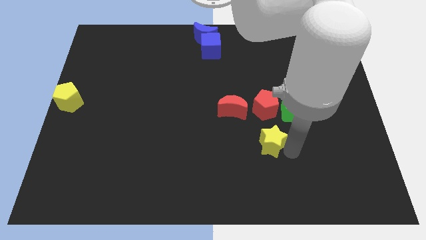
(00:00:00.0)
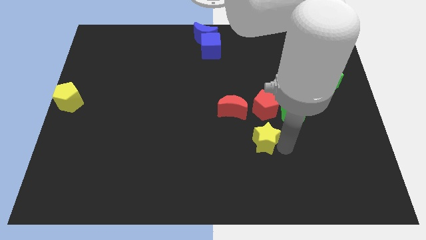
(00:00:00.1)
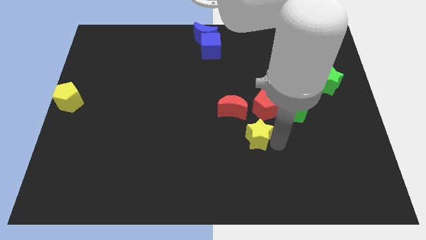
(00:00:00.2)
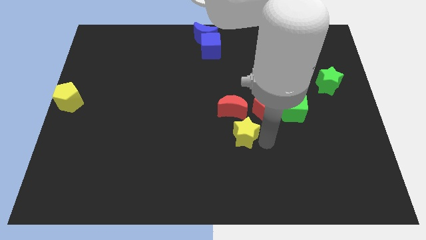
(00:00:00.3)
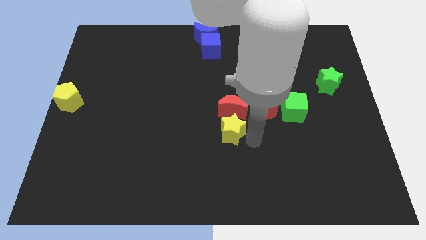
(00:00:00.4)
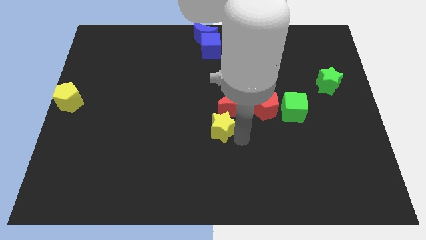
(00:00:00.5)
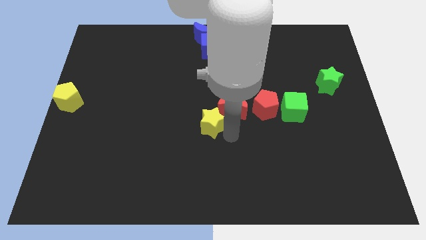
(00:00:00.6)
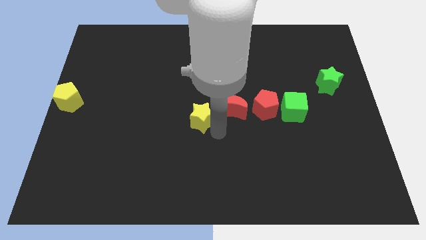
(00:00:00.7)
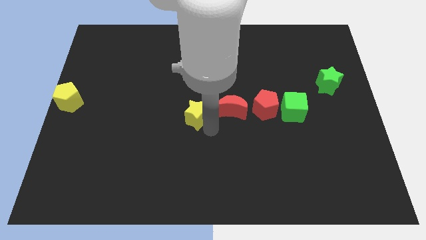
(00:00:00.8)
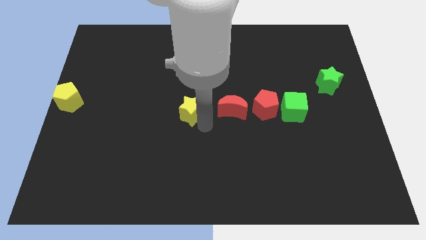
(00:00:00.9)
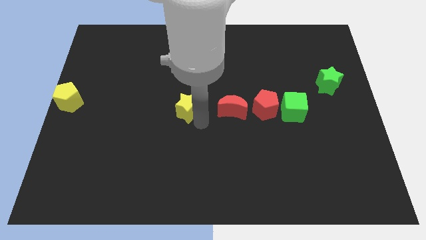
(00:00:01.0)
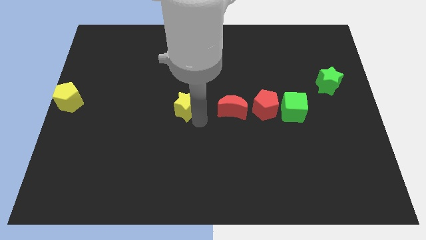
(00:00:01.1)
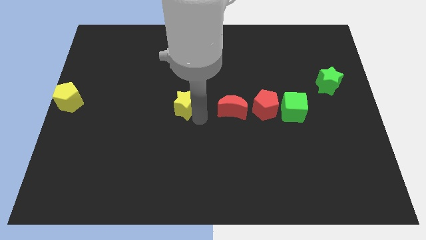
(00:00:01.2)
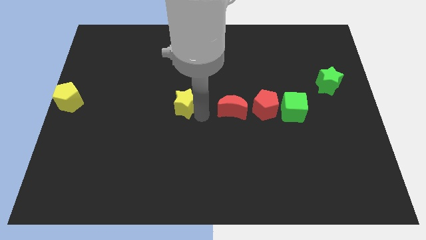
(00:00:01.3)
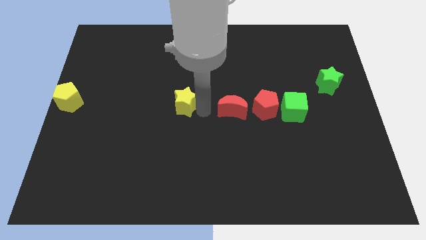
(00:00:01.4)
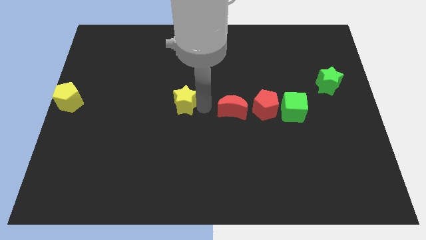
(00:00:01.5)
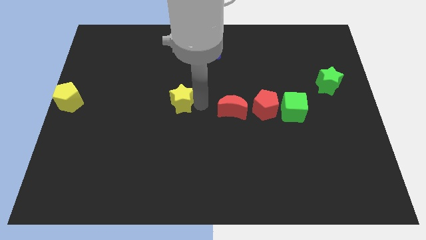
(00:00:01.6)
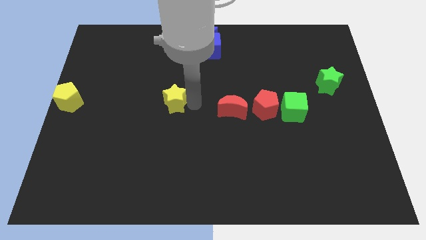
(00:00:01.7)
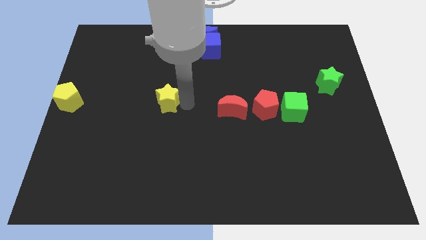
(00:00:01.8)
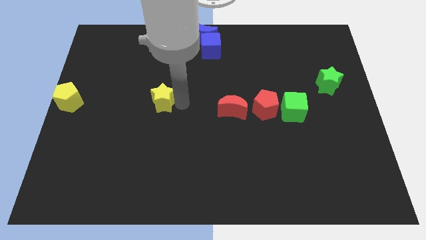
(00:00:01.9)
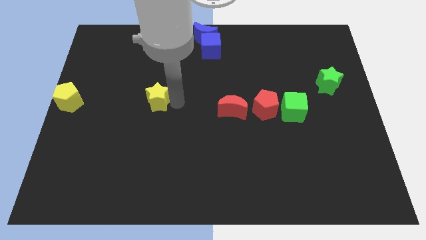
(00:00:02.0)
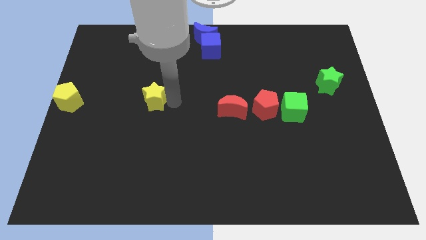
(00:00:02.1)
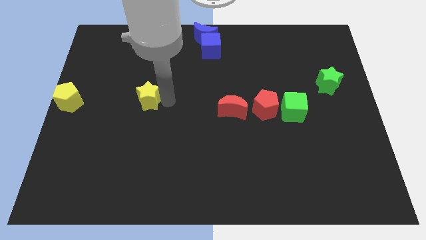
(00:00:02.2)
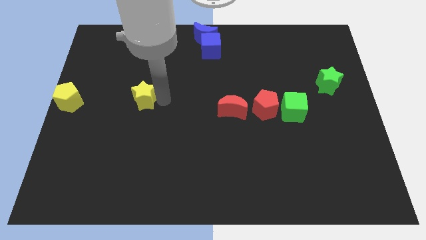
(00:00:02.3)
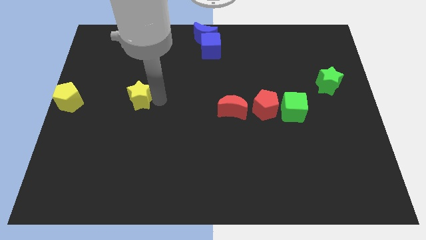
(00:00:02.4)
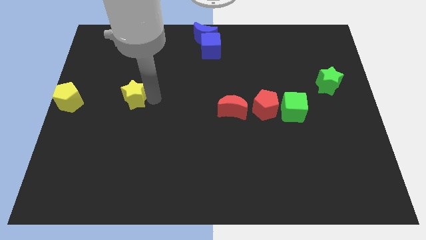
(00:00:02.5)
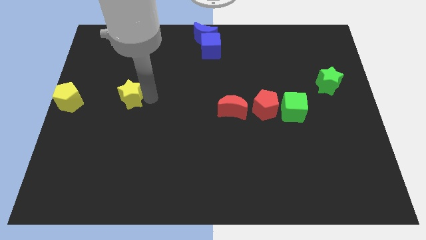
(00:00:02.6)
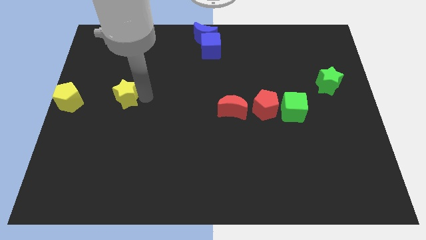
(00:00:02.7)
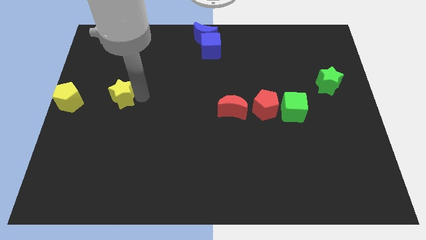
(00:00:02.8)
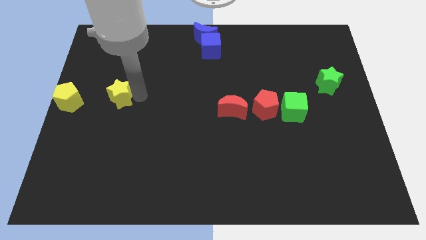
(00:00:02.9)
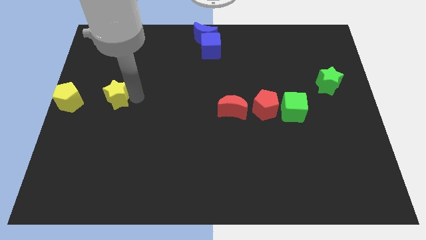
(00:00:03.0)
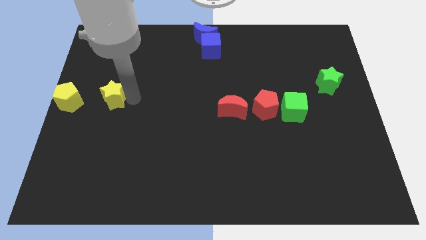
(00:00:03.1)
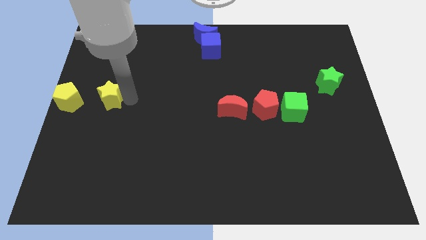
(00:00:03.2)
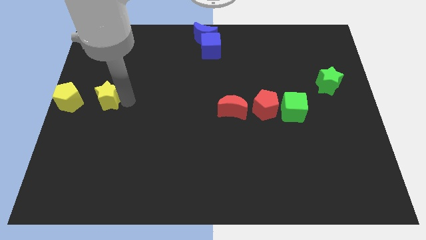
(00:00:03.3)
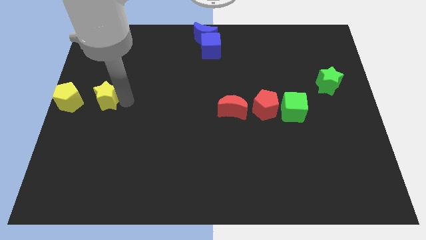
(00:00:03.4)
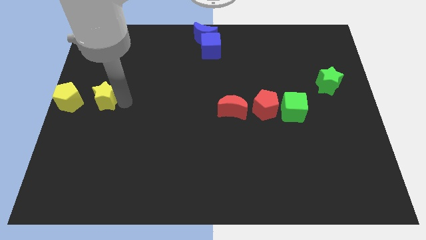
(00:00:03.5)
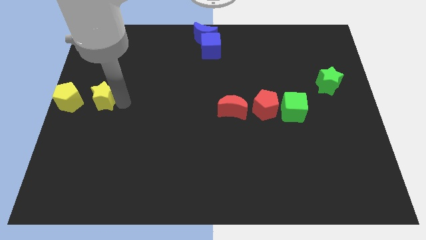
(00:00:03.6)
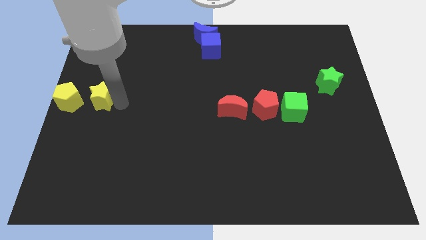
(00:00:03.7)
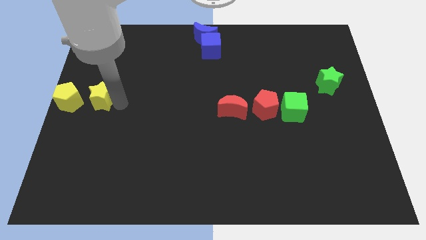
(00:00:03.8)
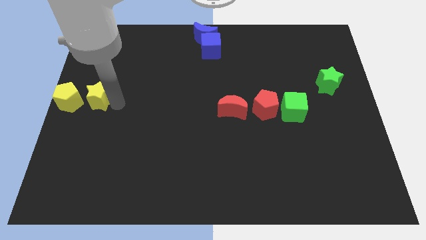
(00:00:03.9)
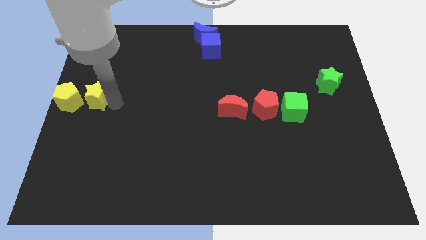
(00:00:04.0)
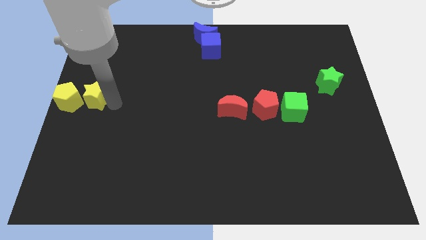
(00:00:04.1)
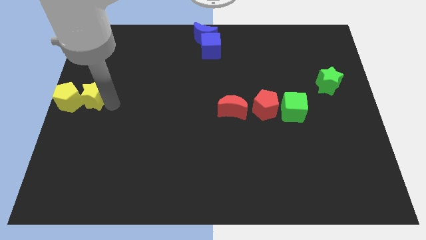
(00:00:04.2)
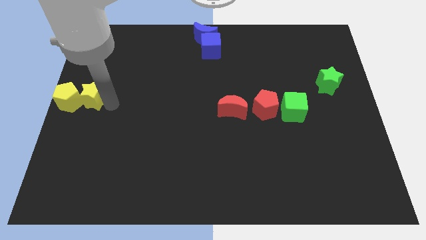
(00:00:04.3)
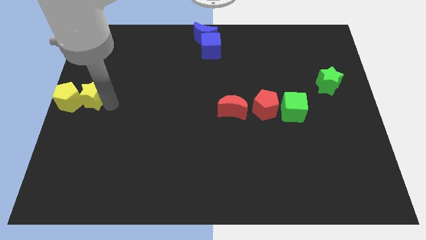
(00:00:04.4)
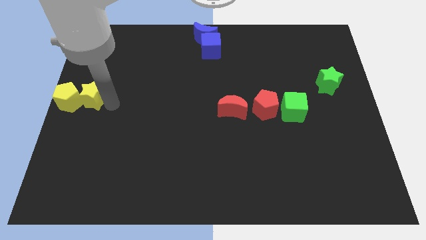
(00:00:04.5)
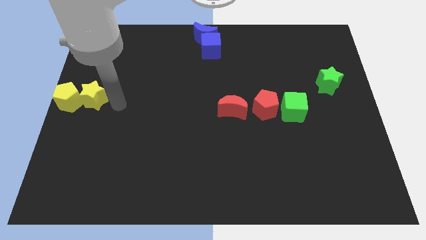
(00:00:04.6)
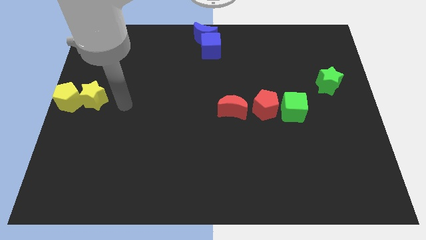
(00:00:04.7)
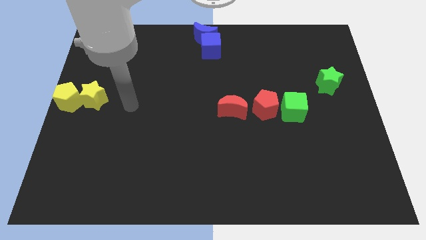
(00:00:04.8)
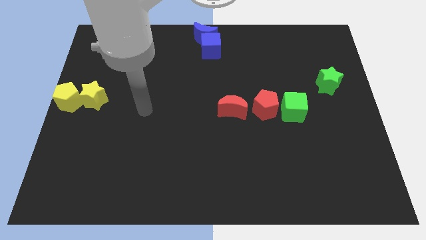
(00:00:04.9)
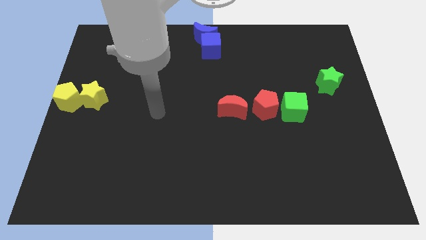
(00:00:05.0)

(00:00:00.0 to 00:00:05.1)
put the yellow star into the yellow pentagon

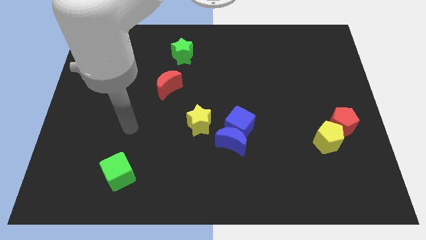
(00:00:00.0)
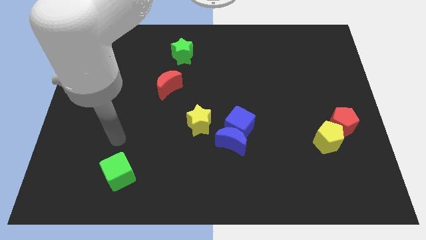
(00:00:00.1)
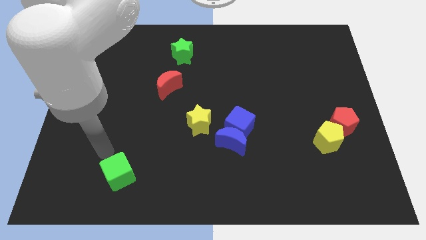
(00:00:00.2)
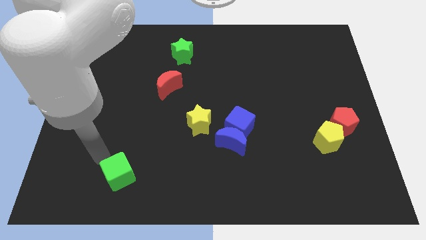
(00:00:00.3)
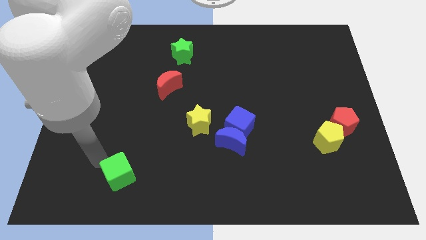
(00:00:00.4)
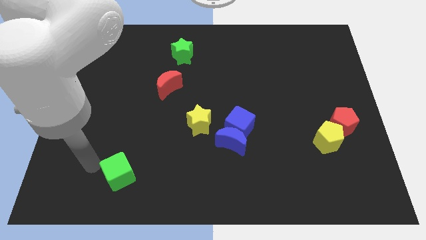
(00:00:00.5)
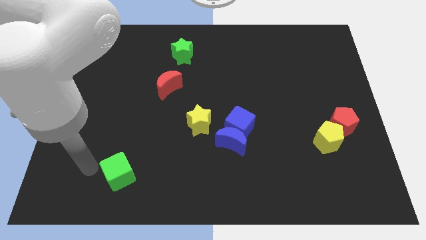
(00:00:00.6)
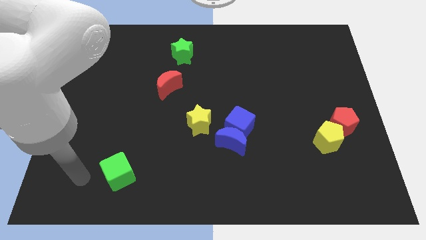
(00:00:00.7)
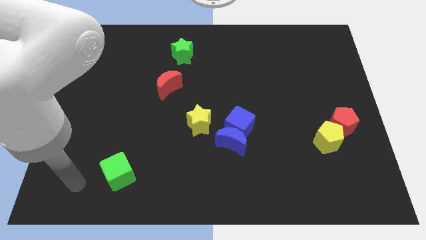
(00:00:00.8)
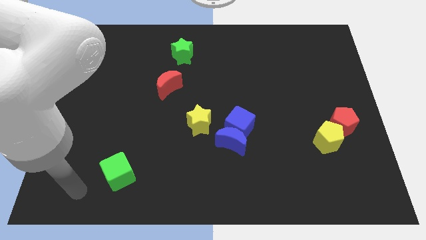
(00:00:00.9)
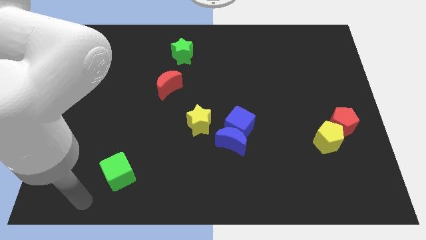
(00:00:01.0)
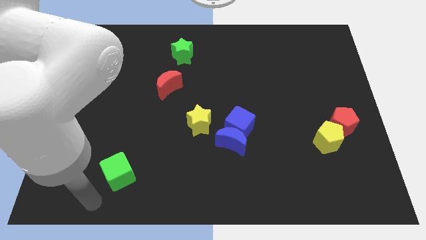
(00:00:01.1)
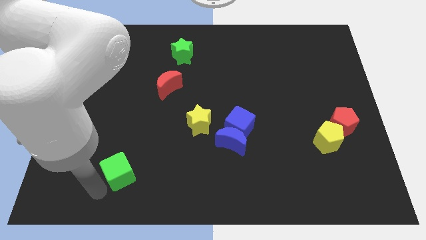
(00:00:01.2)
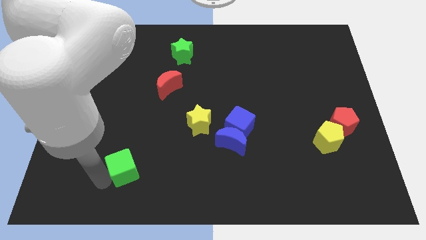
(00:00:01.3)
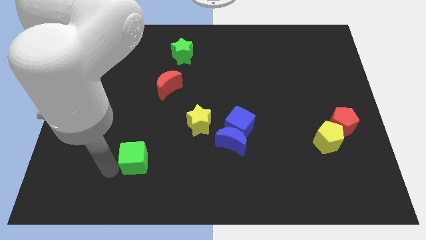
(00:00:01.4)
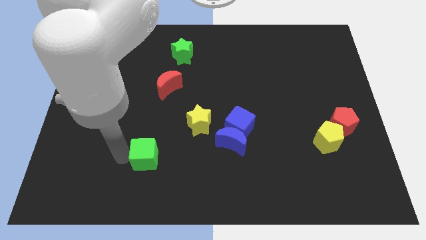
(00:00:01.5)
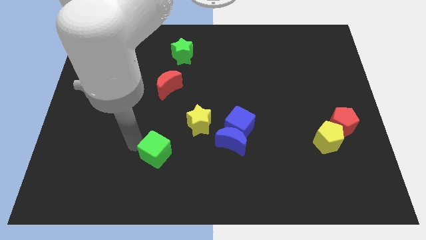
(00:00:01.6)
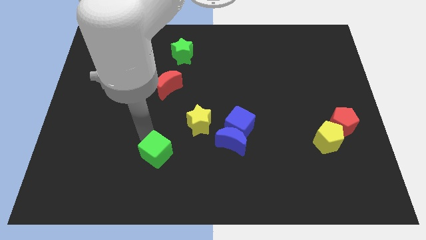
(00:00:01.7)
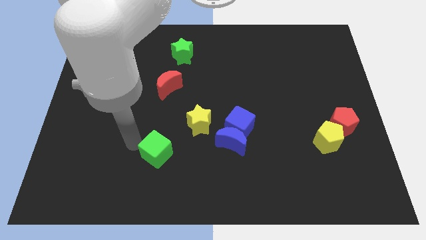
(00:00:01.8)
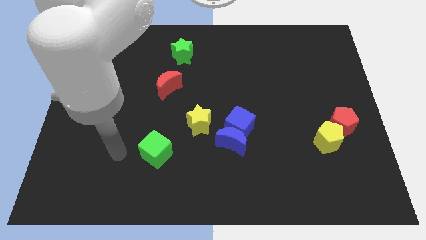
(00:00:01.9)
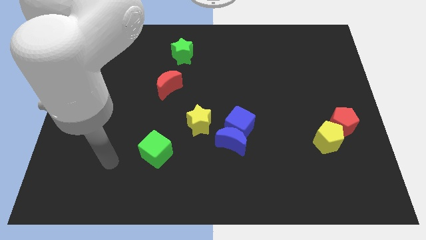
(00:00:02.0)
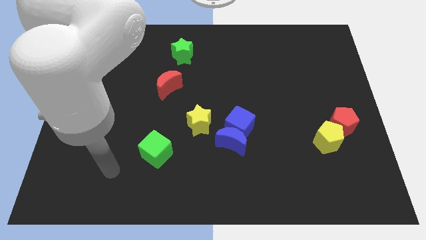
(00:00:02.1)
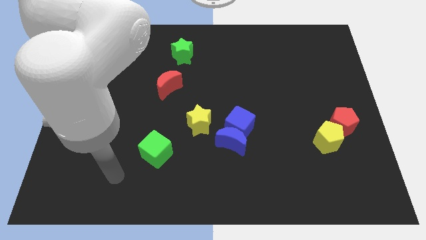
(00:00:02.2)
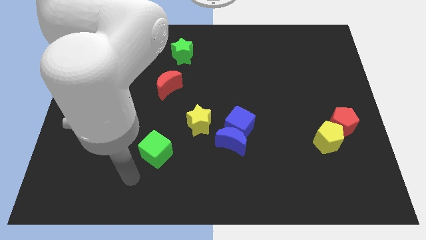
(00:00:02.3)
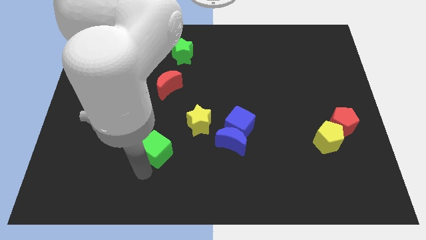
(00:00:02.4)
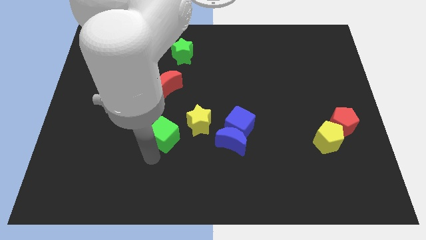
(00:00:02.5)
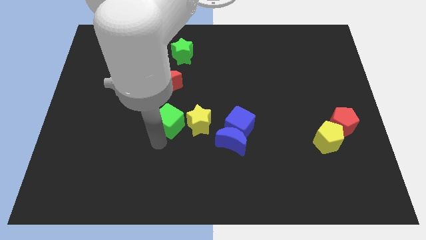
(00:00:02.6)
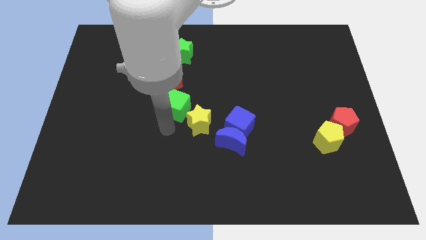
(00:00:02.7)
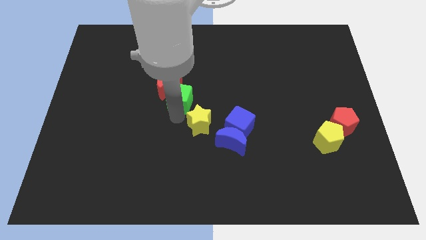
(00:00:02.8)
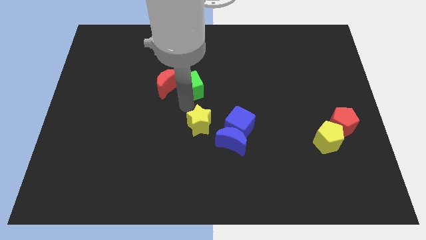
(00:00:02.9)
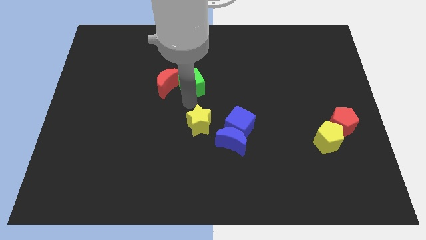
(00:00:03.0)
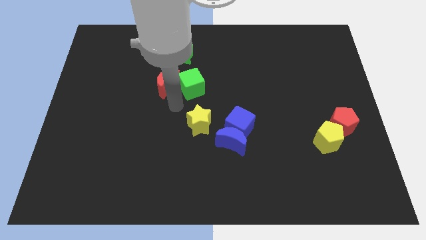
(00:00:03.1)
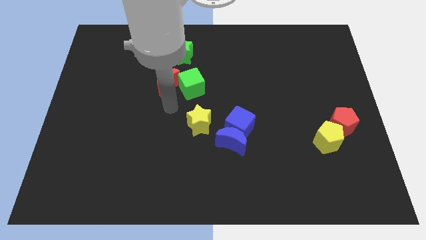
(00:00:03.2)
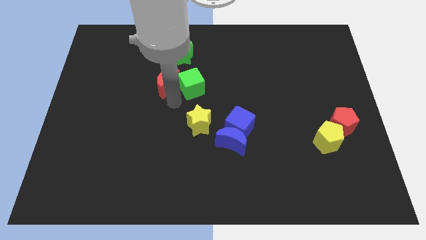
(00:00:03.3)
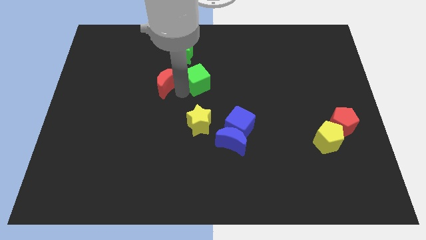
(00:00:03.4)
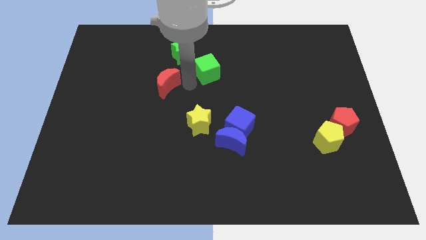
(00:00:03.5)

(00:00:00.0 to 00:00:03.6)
put the green cube to the top side of the yellow star

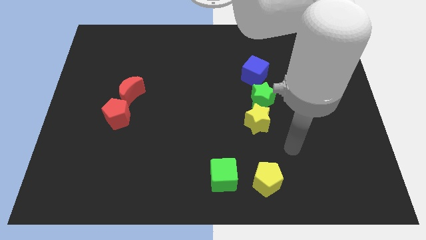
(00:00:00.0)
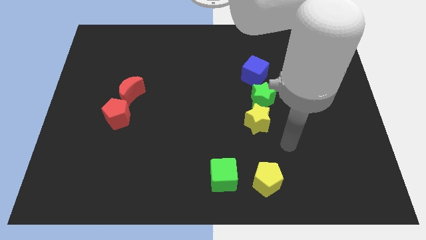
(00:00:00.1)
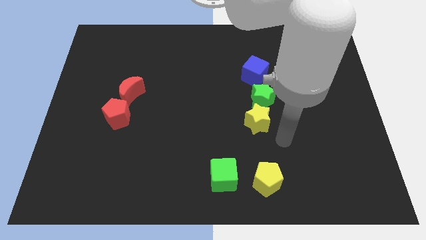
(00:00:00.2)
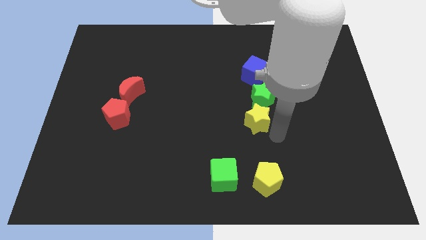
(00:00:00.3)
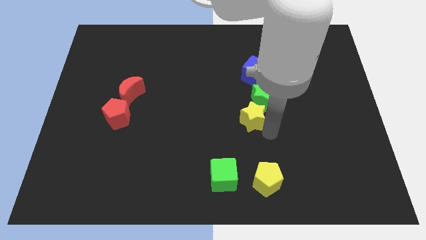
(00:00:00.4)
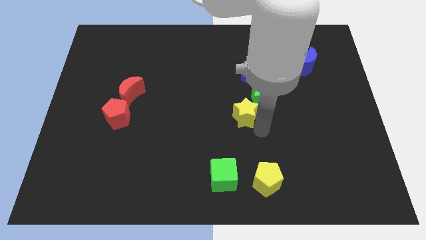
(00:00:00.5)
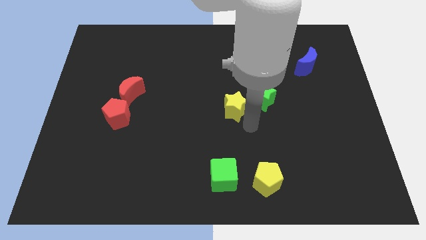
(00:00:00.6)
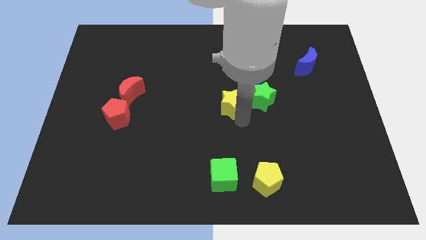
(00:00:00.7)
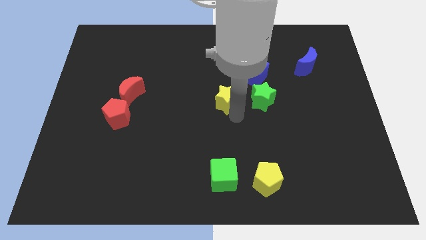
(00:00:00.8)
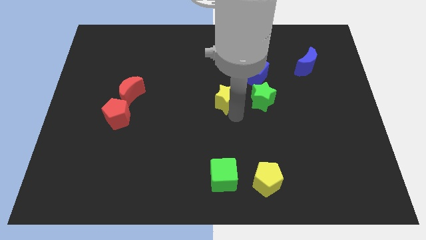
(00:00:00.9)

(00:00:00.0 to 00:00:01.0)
place the yellow star left to the green star
